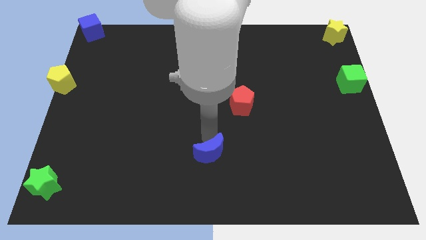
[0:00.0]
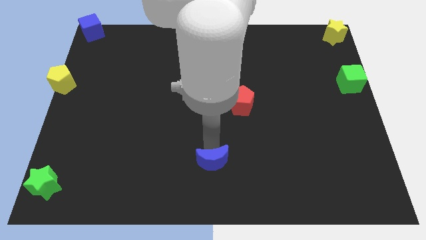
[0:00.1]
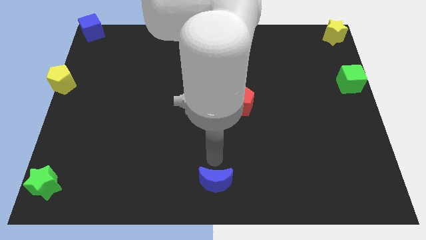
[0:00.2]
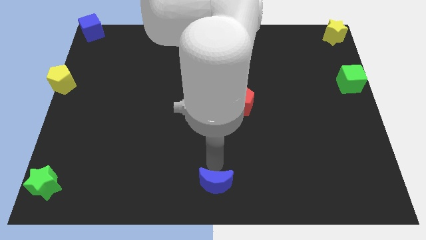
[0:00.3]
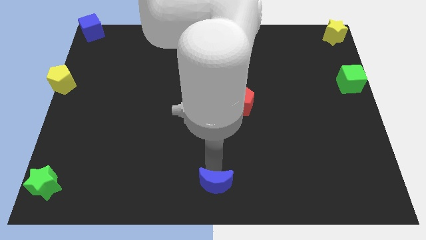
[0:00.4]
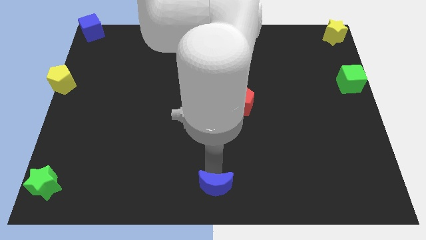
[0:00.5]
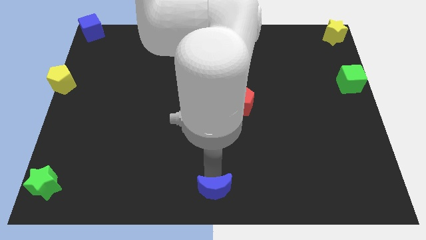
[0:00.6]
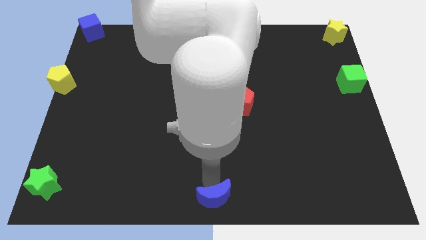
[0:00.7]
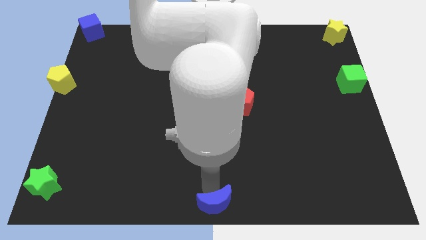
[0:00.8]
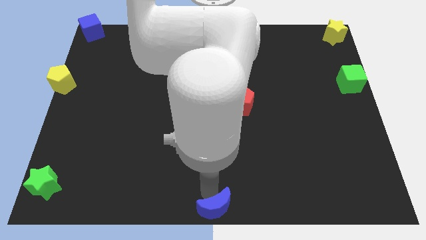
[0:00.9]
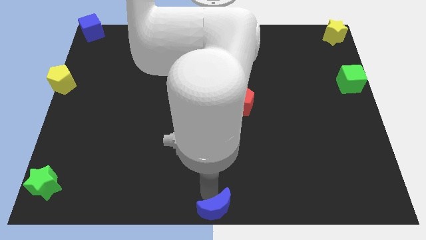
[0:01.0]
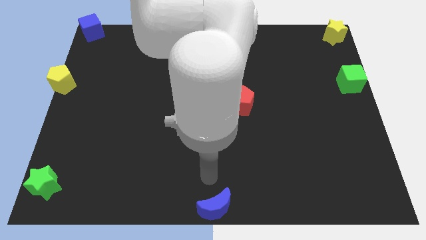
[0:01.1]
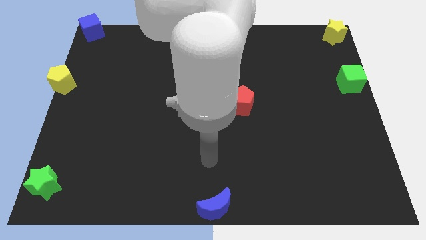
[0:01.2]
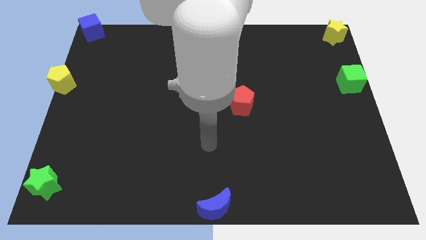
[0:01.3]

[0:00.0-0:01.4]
push the blue moon to the bottom middle of the board

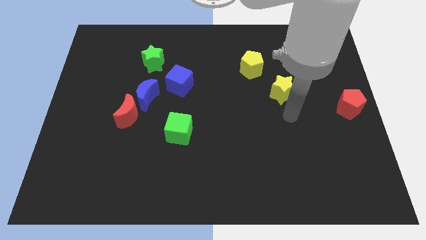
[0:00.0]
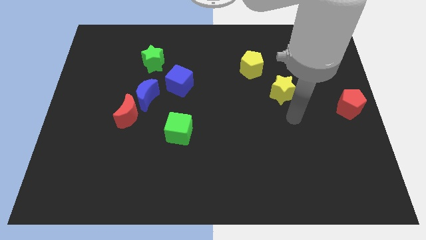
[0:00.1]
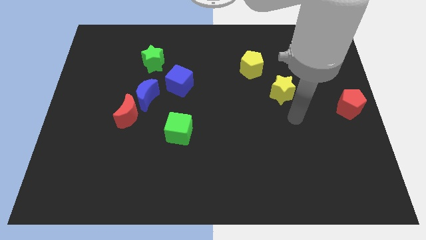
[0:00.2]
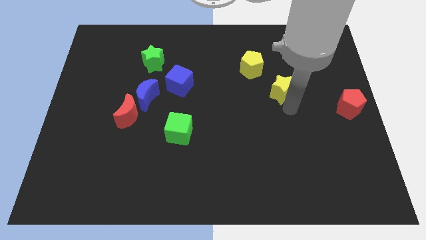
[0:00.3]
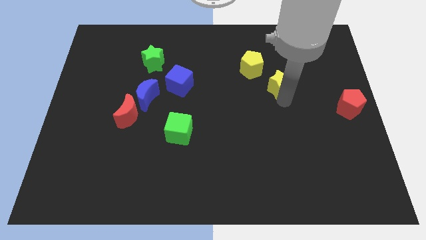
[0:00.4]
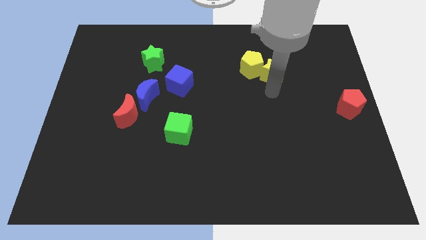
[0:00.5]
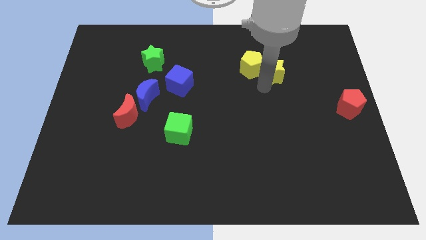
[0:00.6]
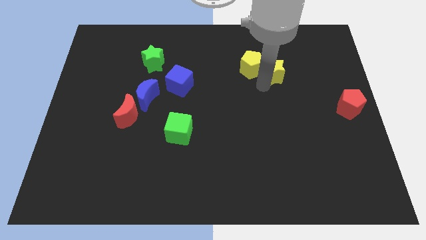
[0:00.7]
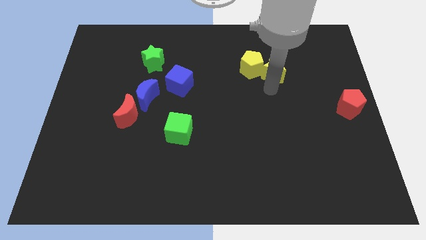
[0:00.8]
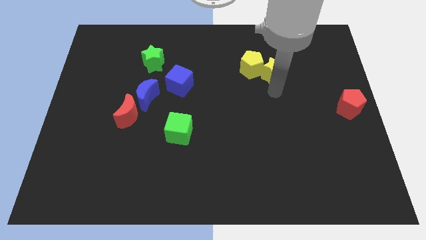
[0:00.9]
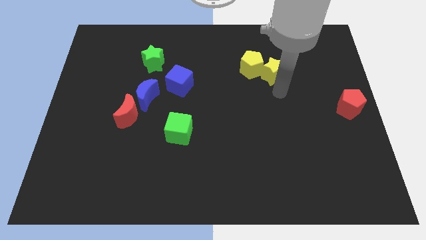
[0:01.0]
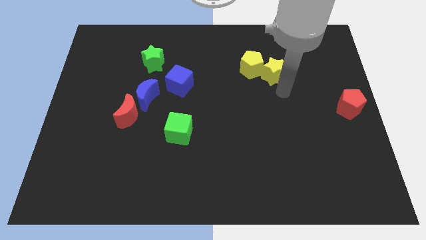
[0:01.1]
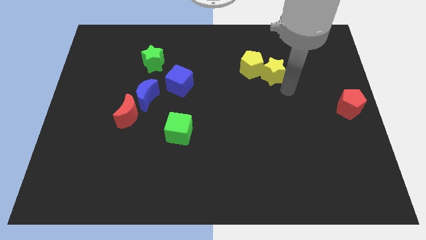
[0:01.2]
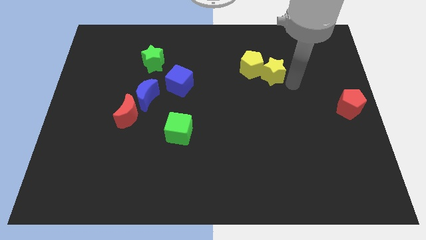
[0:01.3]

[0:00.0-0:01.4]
drag the yellow star into the yellow pentagon

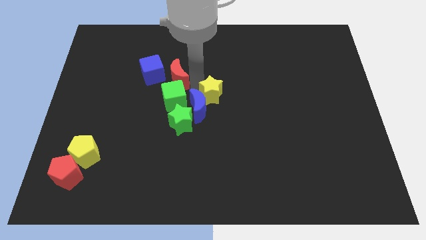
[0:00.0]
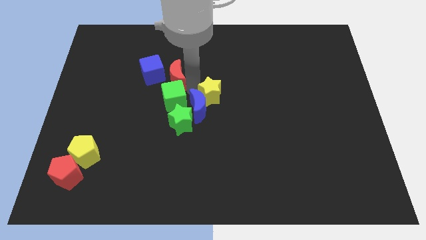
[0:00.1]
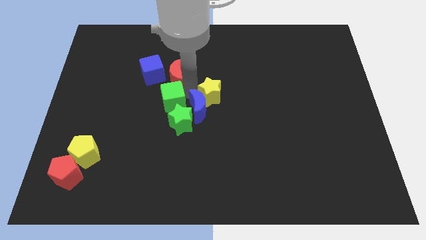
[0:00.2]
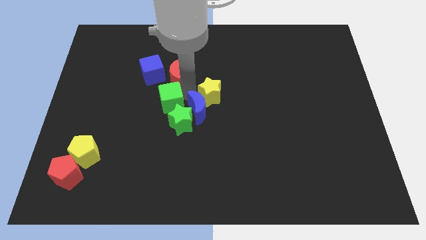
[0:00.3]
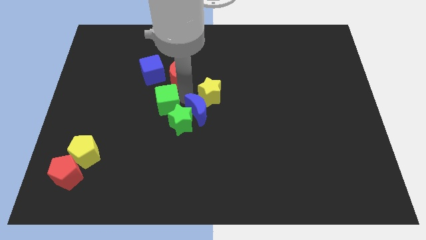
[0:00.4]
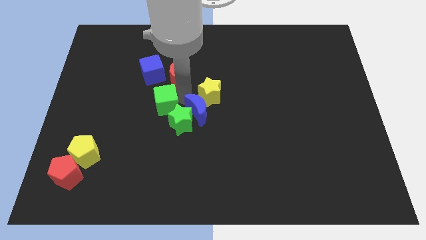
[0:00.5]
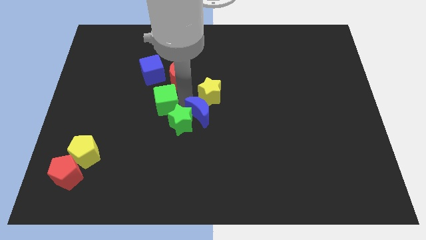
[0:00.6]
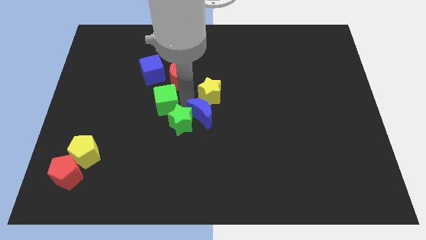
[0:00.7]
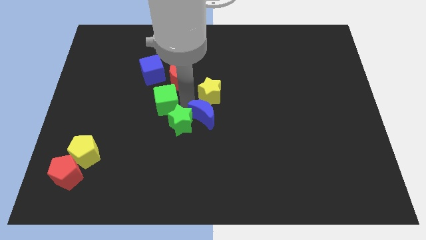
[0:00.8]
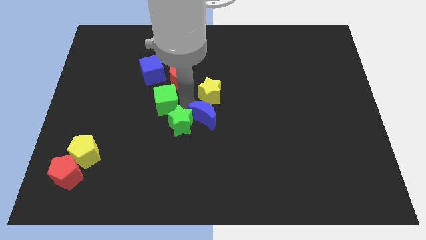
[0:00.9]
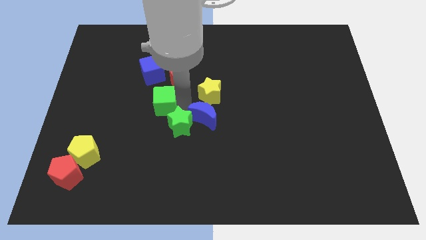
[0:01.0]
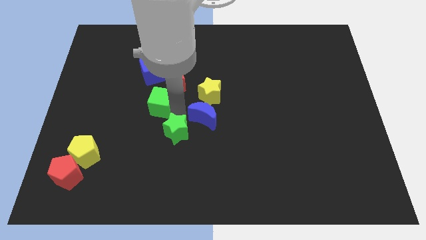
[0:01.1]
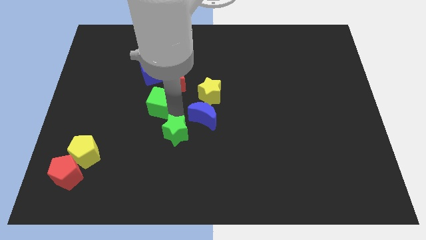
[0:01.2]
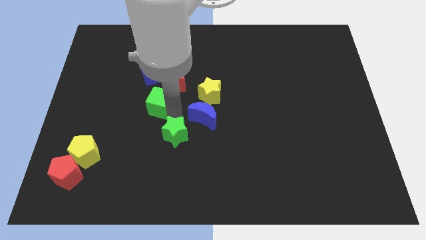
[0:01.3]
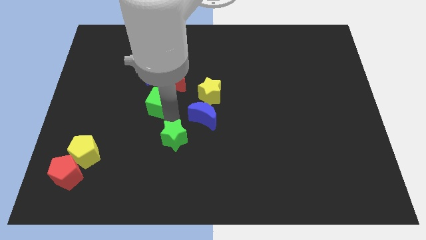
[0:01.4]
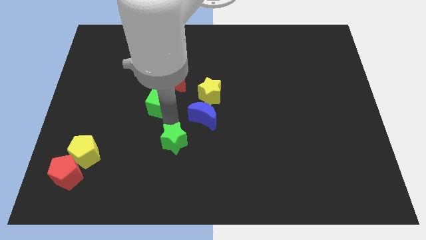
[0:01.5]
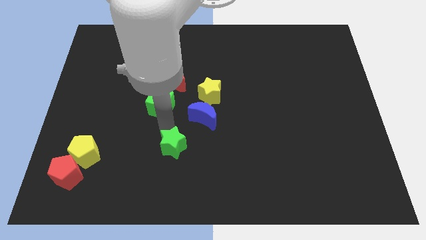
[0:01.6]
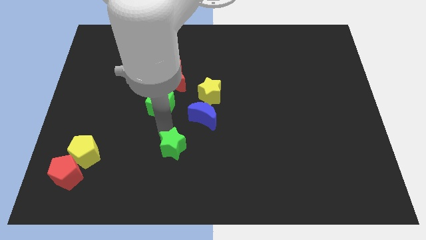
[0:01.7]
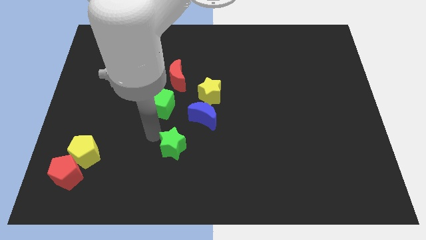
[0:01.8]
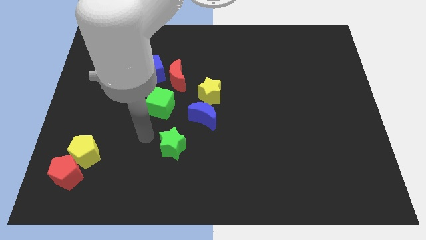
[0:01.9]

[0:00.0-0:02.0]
push the green star slightly downwards

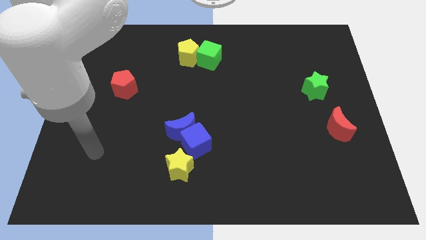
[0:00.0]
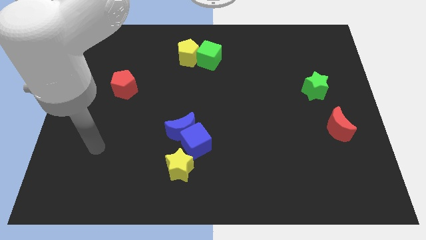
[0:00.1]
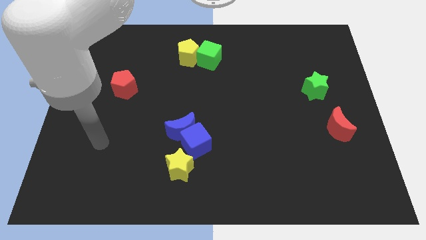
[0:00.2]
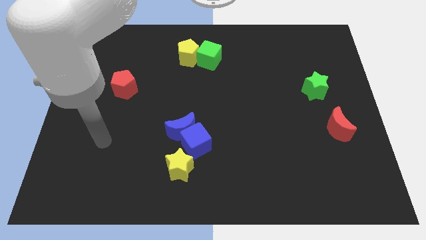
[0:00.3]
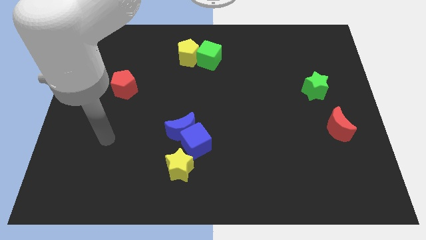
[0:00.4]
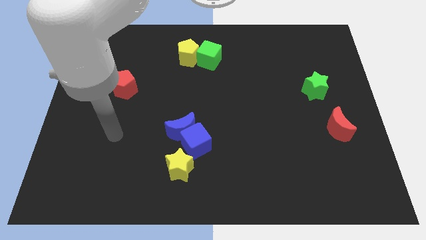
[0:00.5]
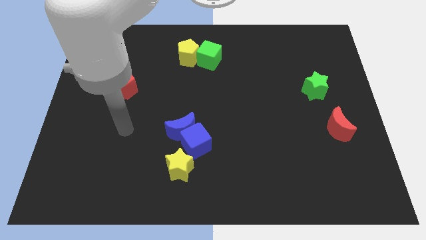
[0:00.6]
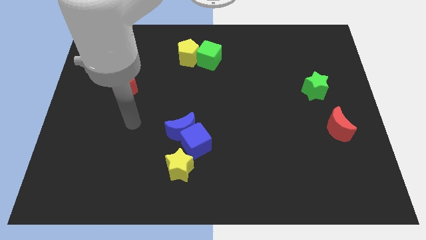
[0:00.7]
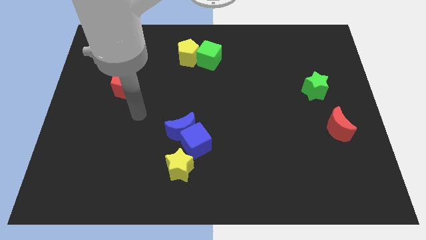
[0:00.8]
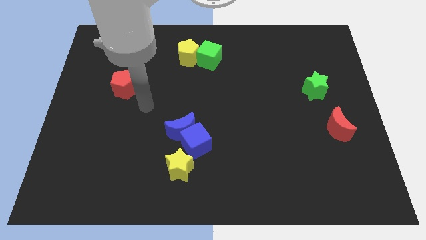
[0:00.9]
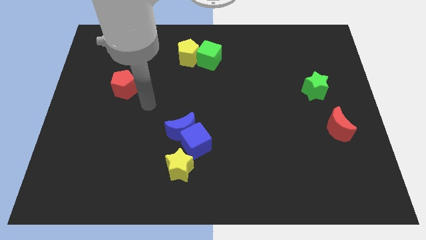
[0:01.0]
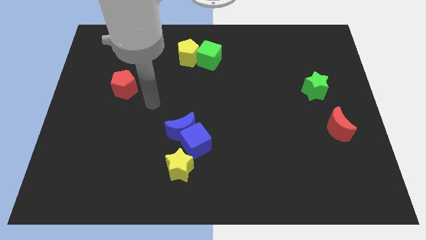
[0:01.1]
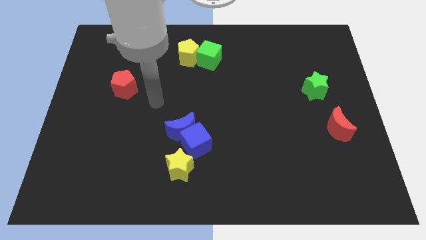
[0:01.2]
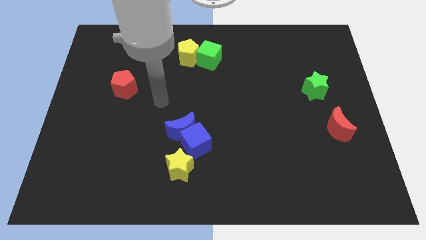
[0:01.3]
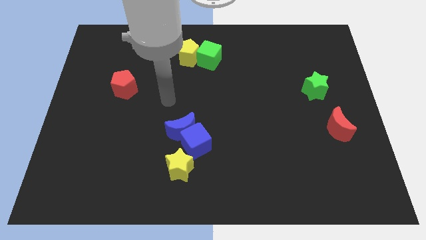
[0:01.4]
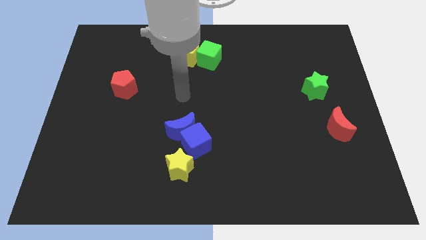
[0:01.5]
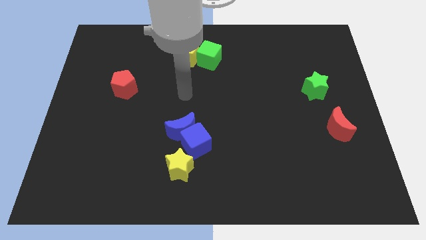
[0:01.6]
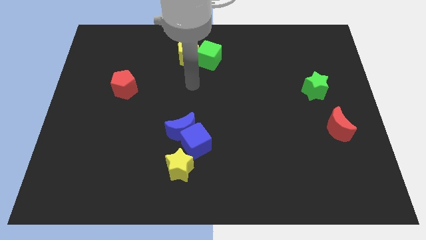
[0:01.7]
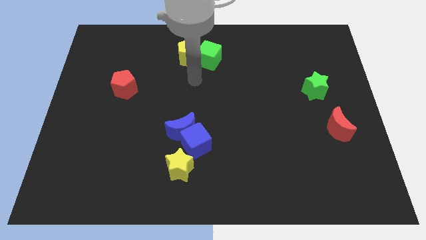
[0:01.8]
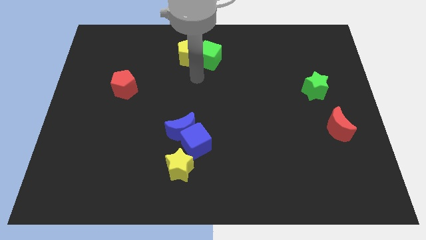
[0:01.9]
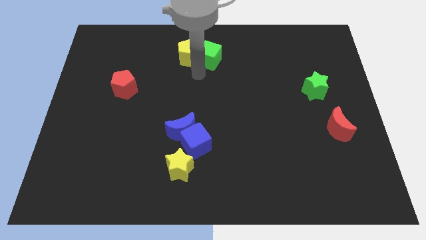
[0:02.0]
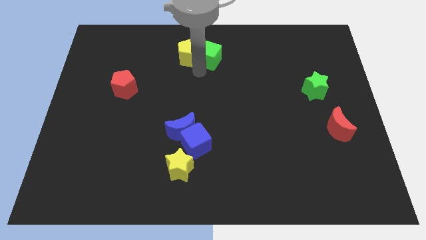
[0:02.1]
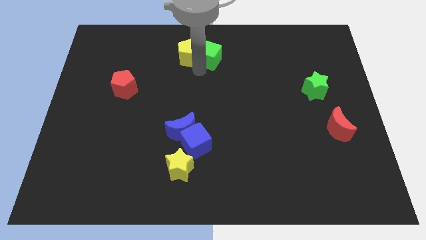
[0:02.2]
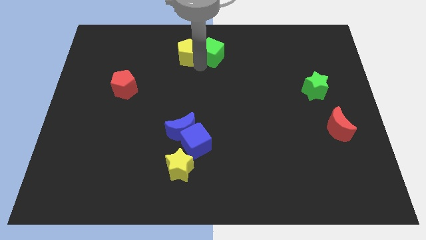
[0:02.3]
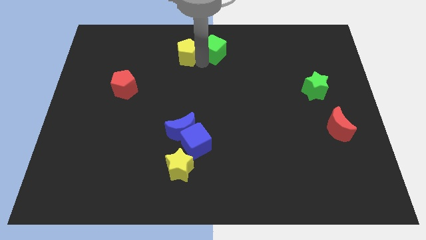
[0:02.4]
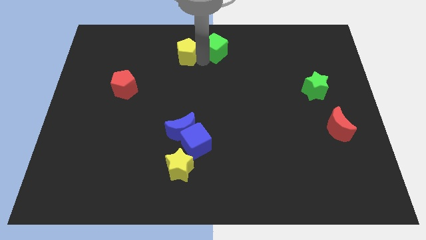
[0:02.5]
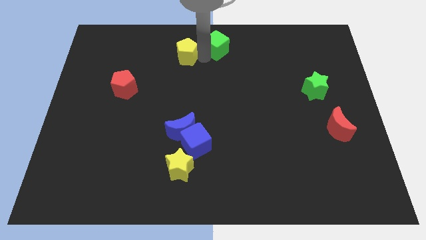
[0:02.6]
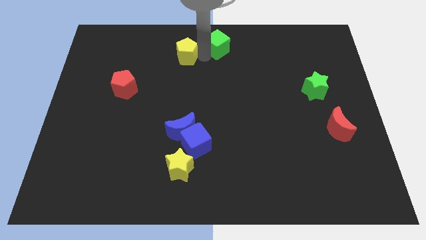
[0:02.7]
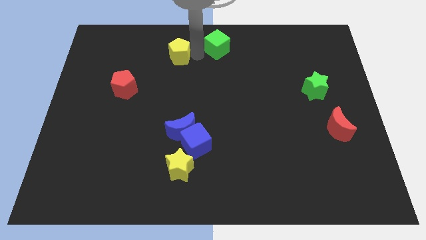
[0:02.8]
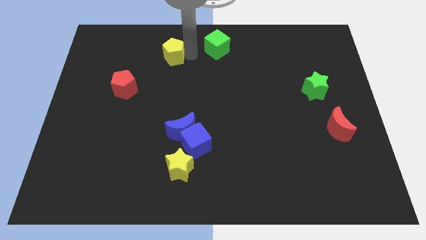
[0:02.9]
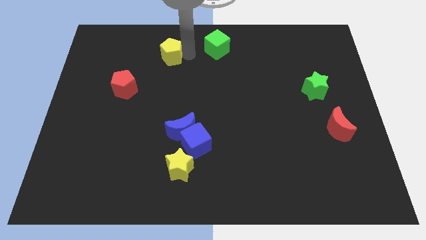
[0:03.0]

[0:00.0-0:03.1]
separate green cube and yellow pentagon

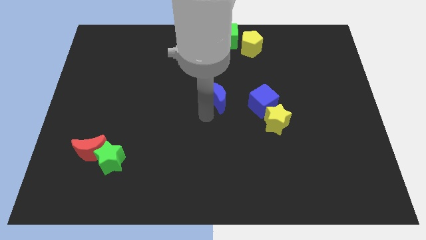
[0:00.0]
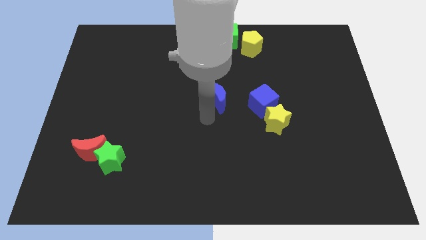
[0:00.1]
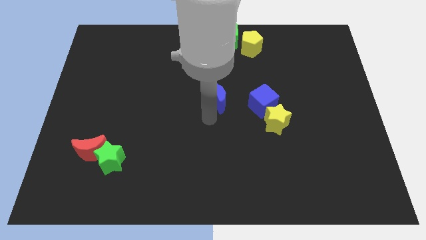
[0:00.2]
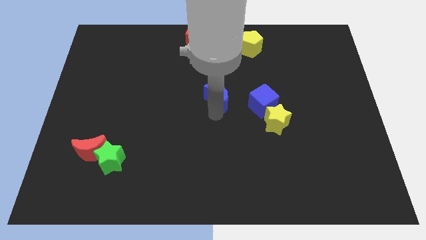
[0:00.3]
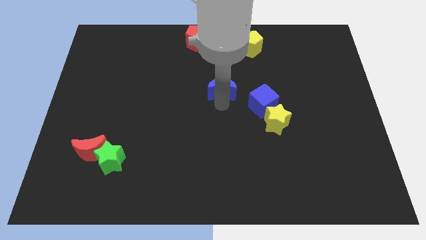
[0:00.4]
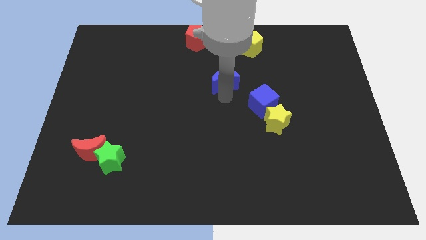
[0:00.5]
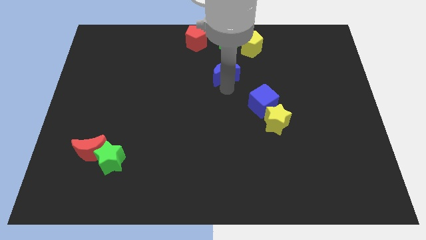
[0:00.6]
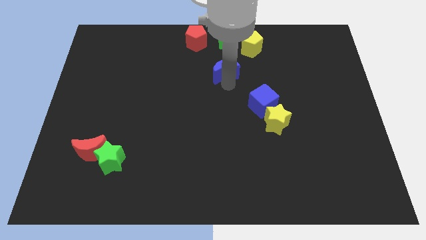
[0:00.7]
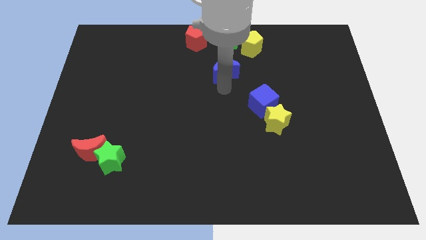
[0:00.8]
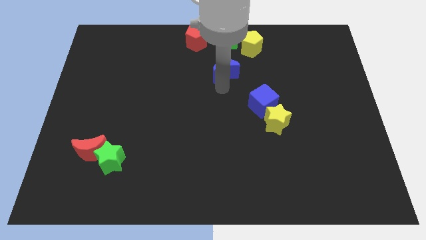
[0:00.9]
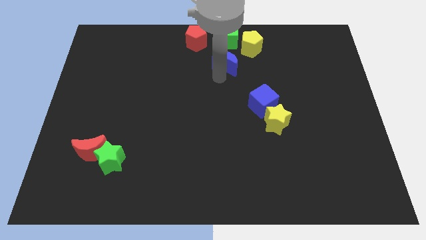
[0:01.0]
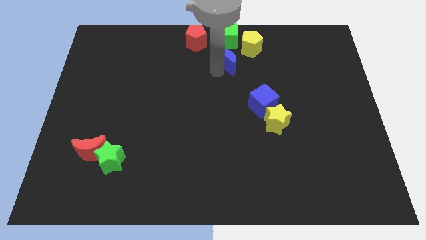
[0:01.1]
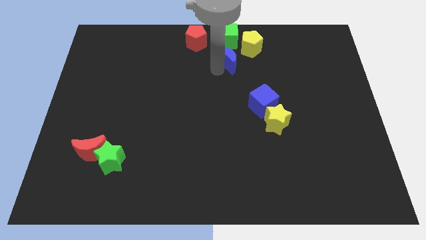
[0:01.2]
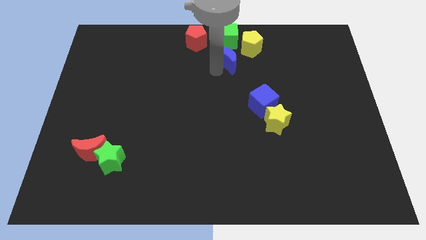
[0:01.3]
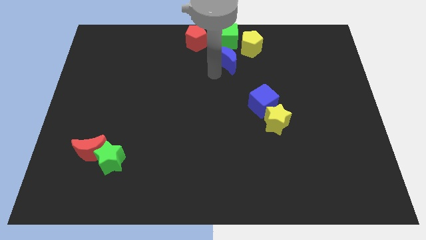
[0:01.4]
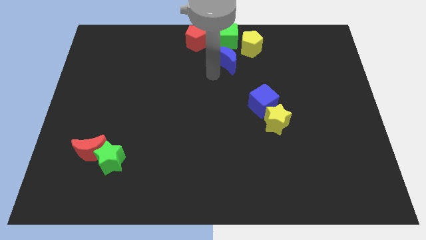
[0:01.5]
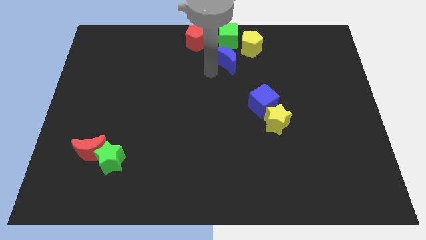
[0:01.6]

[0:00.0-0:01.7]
place the blue moon below the green cube
